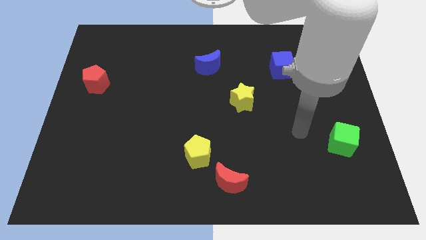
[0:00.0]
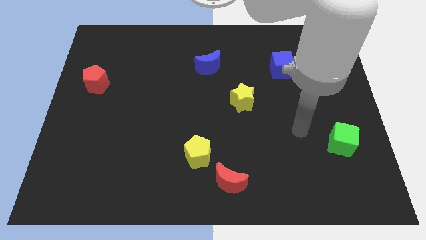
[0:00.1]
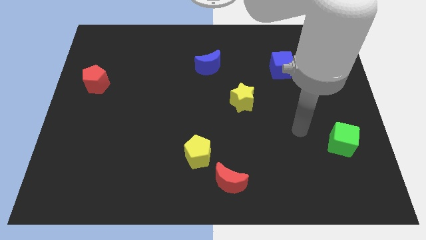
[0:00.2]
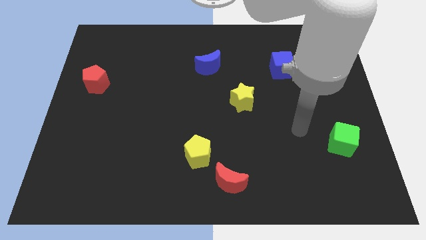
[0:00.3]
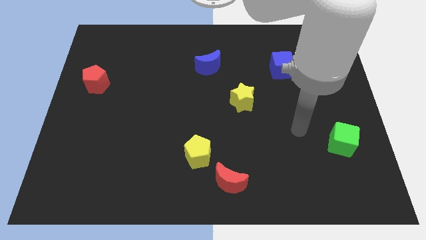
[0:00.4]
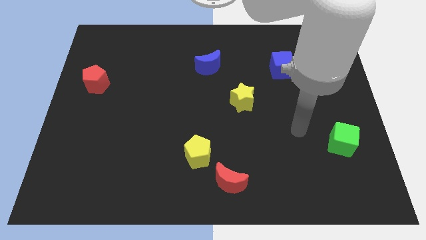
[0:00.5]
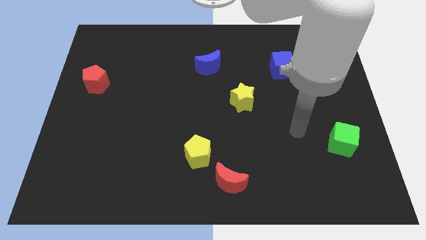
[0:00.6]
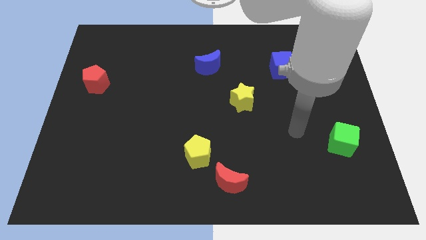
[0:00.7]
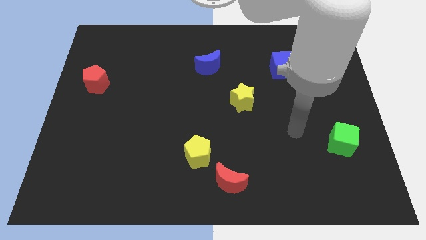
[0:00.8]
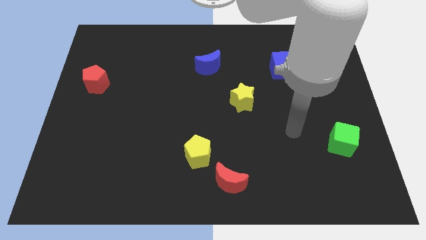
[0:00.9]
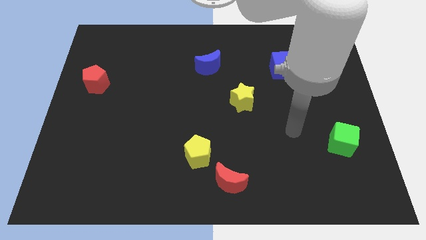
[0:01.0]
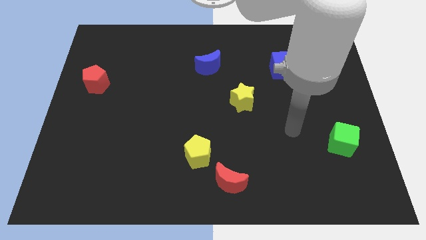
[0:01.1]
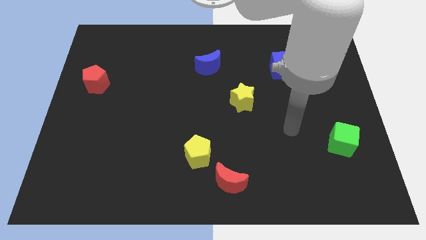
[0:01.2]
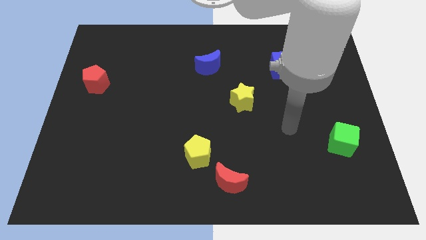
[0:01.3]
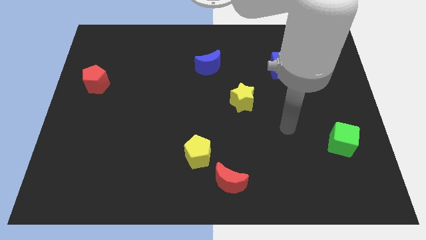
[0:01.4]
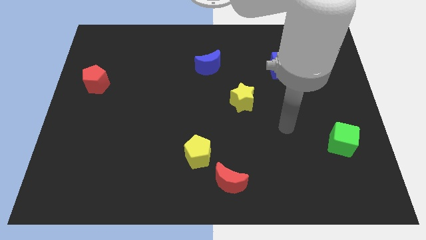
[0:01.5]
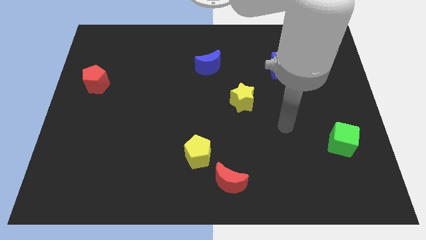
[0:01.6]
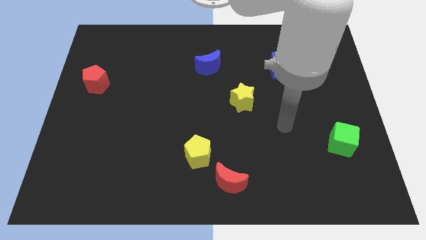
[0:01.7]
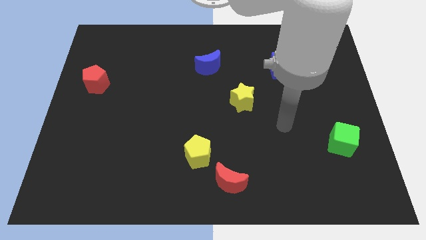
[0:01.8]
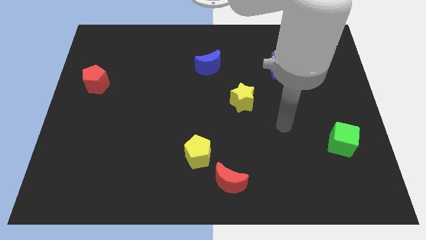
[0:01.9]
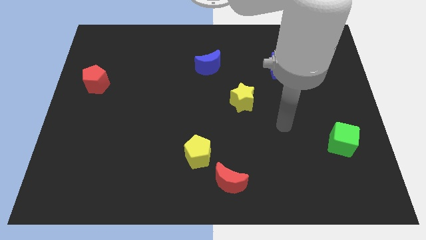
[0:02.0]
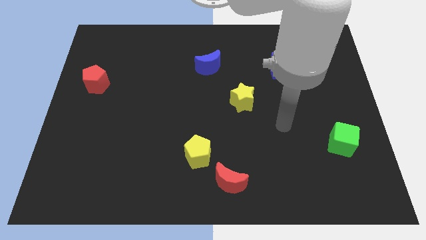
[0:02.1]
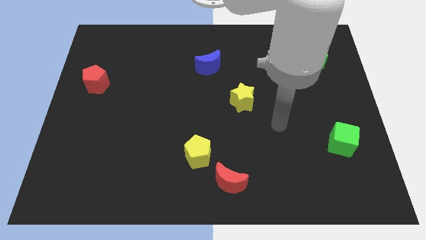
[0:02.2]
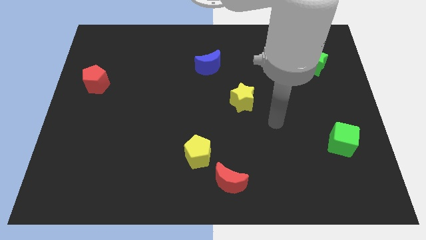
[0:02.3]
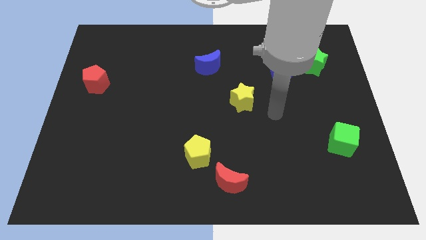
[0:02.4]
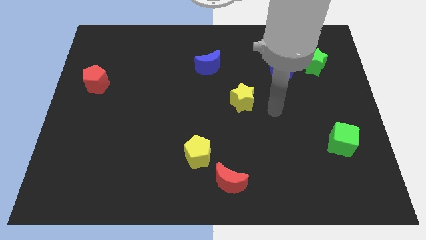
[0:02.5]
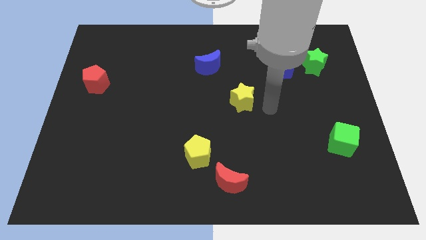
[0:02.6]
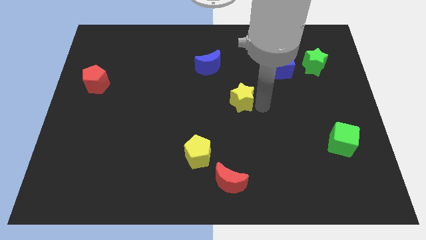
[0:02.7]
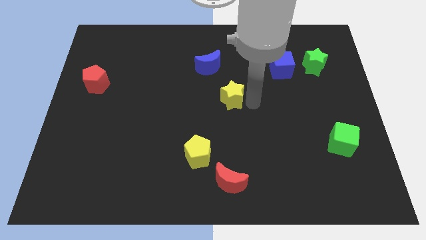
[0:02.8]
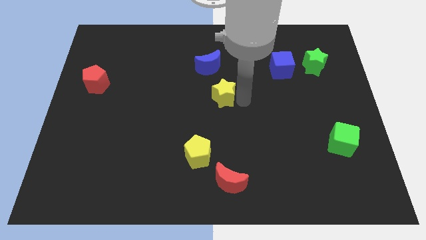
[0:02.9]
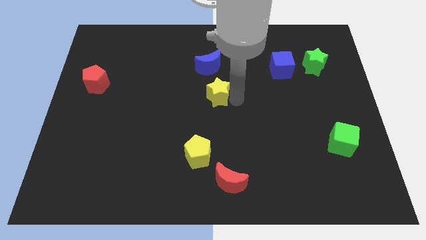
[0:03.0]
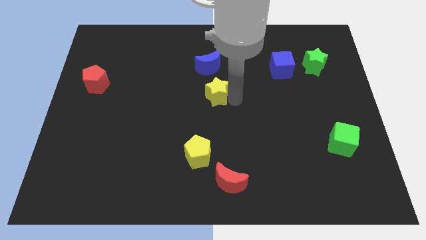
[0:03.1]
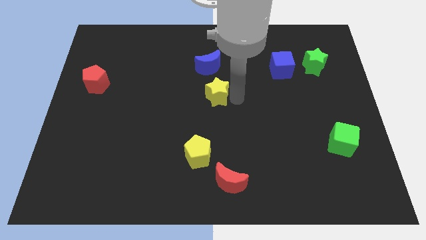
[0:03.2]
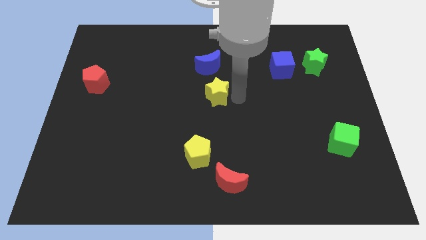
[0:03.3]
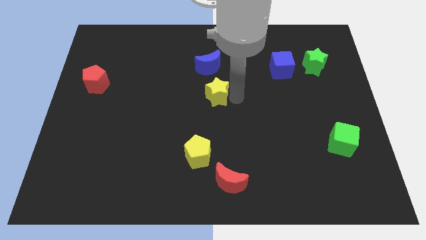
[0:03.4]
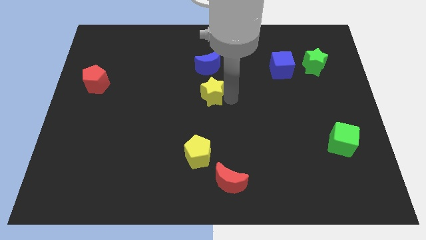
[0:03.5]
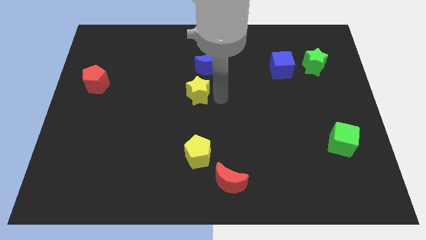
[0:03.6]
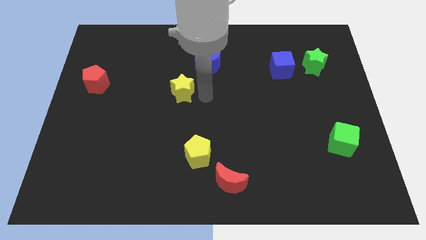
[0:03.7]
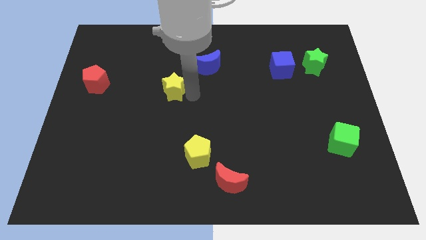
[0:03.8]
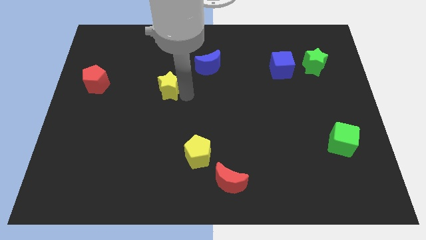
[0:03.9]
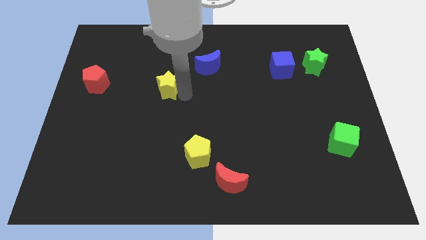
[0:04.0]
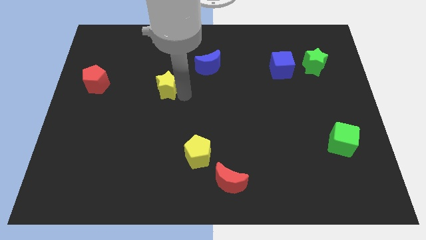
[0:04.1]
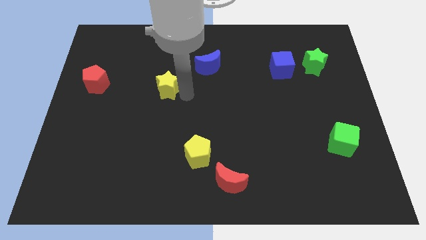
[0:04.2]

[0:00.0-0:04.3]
arrange the yellow star parallel towards the right side of the red pentagon

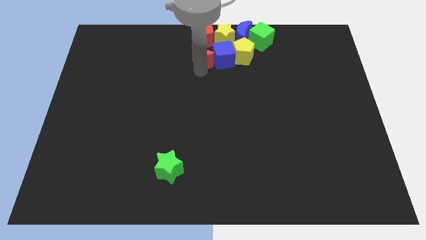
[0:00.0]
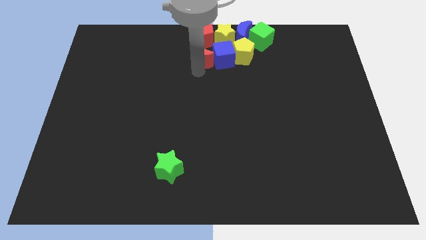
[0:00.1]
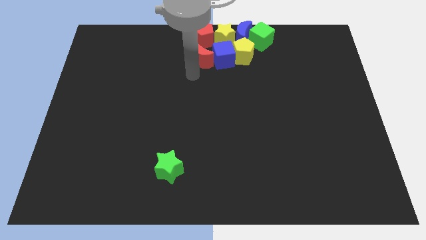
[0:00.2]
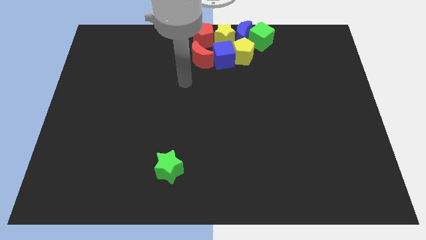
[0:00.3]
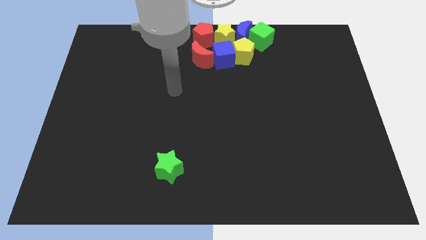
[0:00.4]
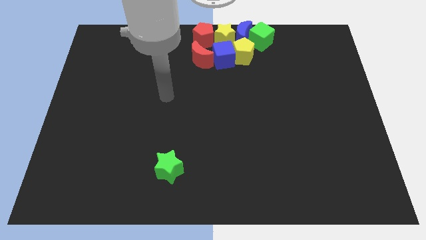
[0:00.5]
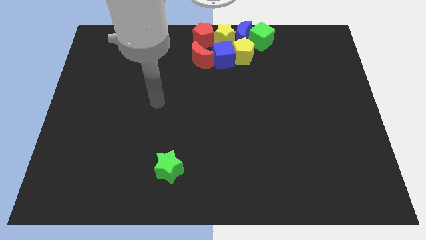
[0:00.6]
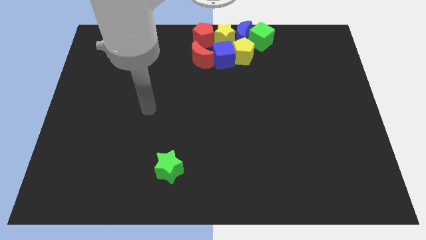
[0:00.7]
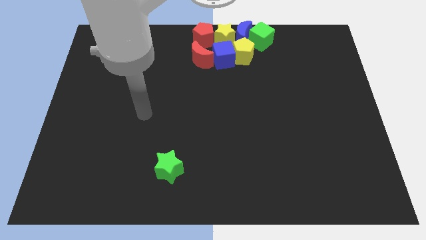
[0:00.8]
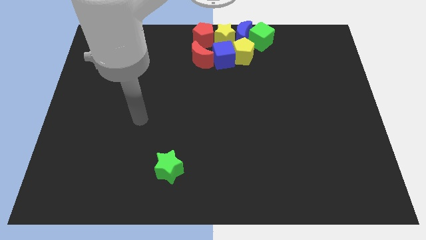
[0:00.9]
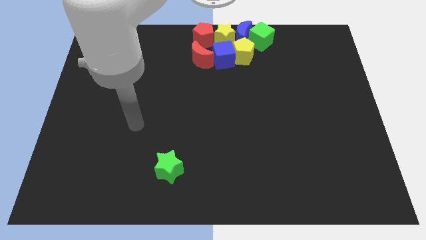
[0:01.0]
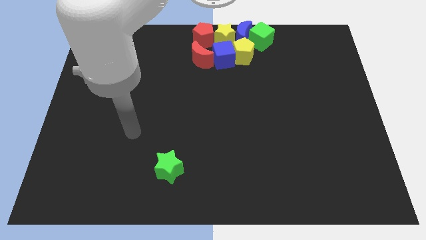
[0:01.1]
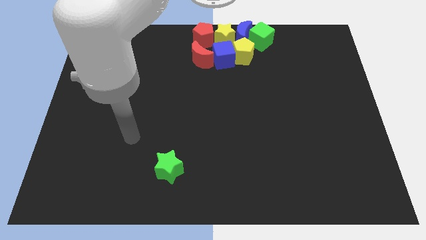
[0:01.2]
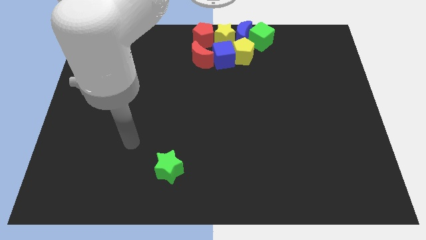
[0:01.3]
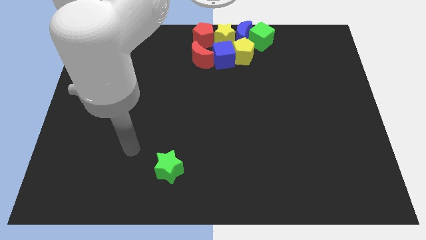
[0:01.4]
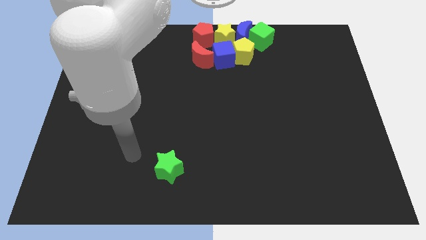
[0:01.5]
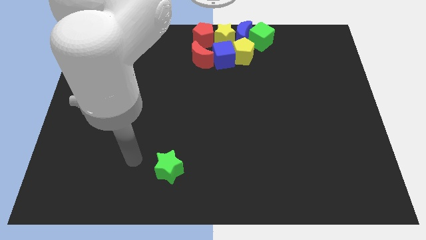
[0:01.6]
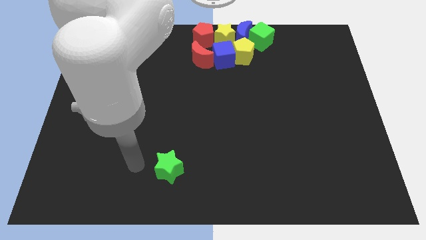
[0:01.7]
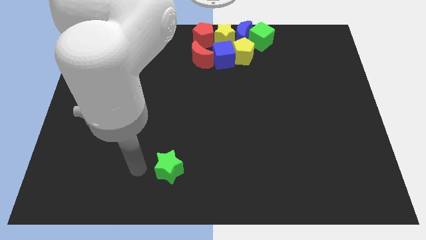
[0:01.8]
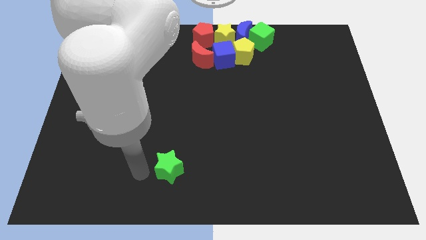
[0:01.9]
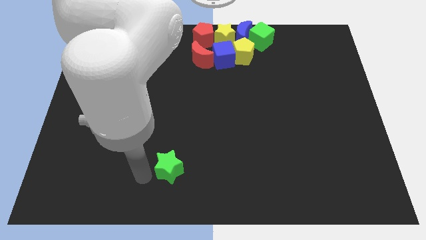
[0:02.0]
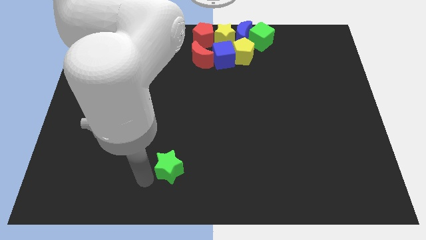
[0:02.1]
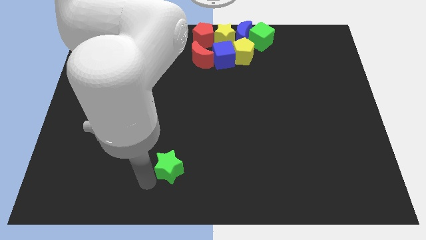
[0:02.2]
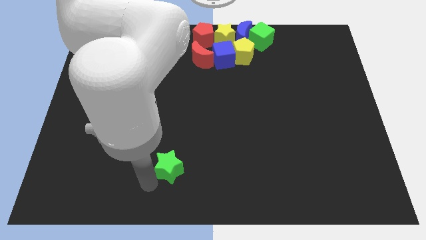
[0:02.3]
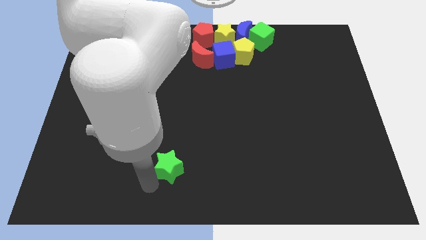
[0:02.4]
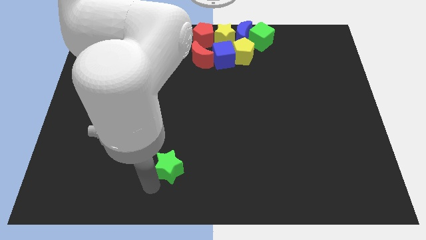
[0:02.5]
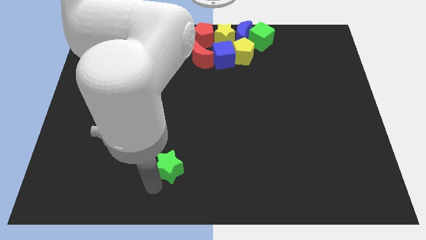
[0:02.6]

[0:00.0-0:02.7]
move your arm to the bottom of the green star

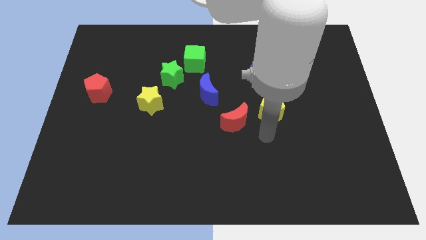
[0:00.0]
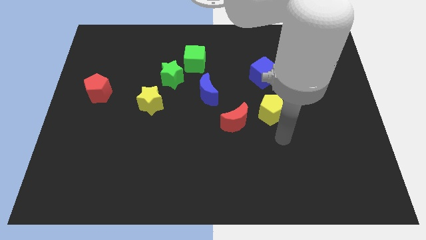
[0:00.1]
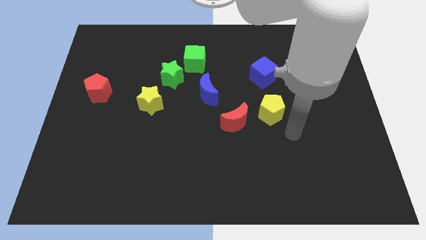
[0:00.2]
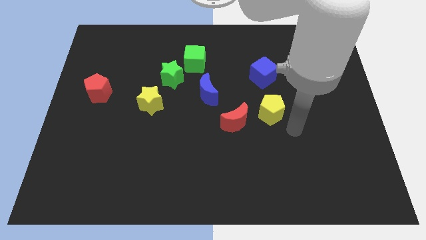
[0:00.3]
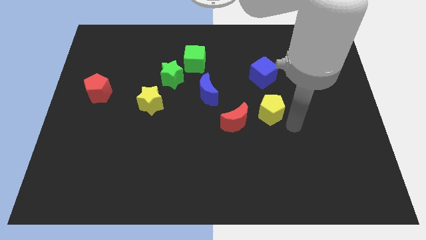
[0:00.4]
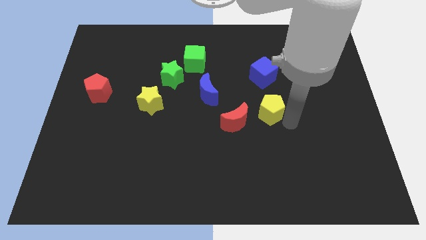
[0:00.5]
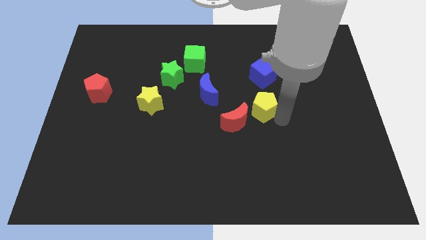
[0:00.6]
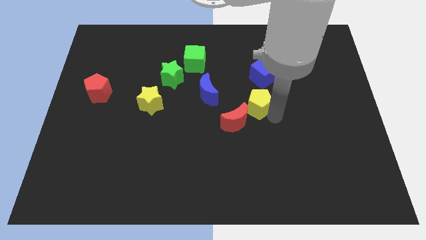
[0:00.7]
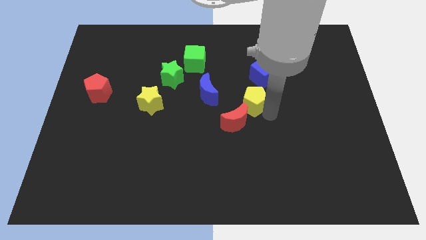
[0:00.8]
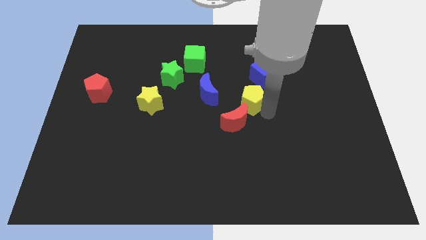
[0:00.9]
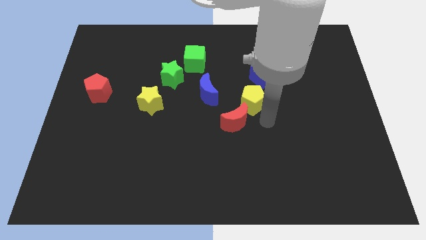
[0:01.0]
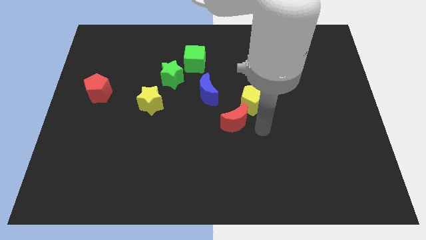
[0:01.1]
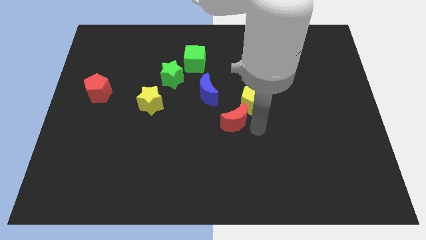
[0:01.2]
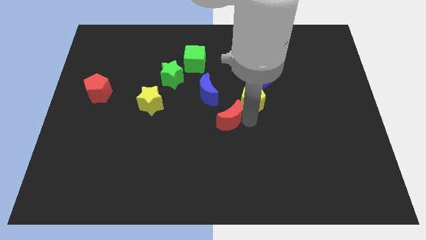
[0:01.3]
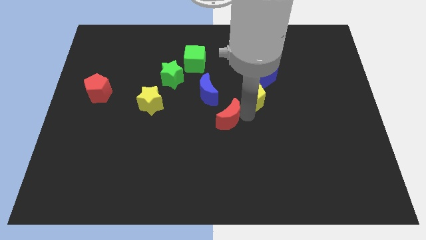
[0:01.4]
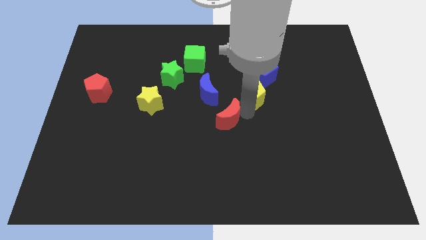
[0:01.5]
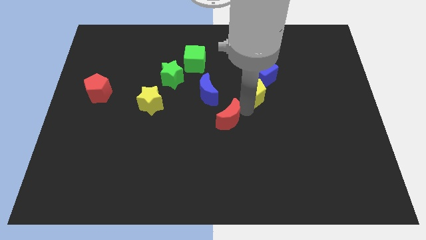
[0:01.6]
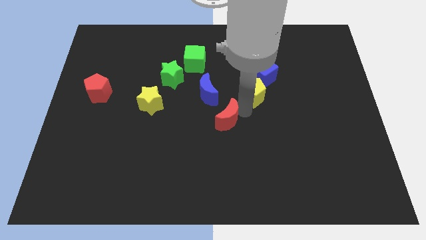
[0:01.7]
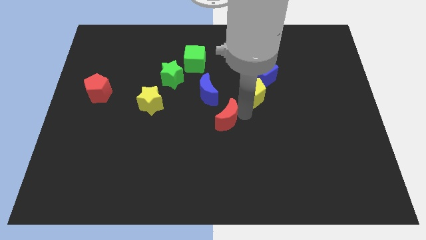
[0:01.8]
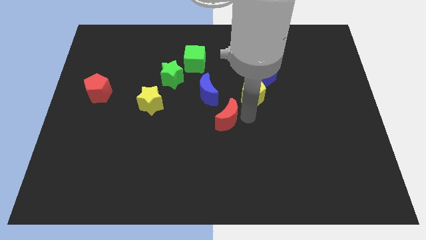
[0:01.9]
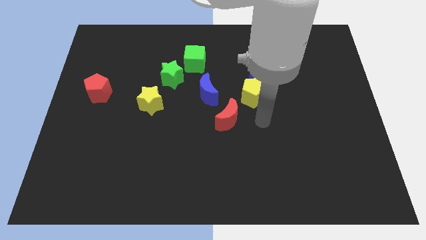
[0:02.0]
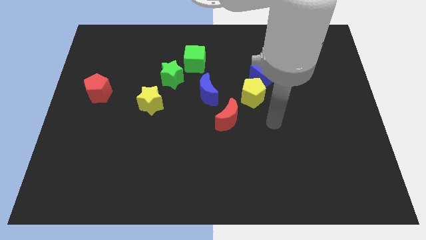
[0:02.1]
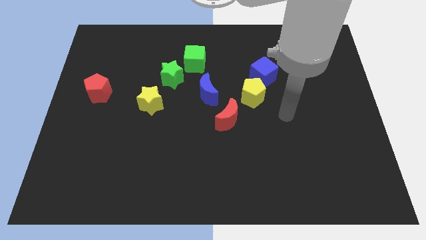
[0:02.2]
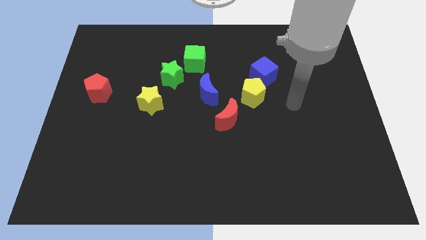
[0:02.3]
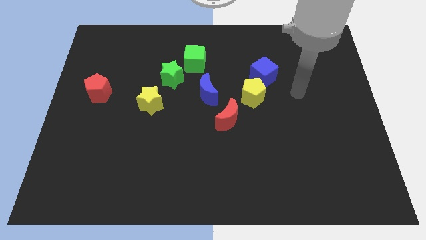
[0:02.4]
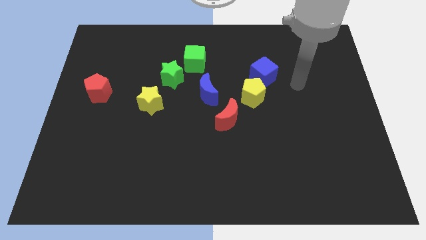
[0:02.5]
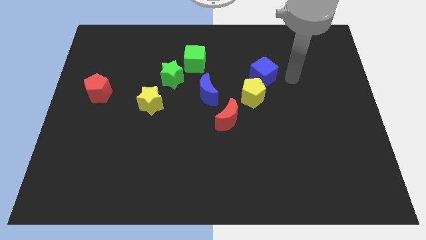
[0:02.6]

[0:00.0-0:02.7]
push the yellow pentagon close to the blue cube
